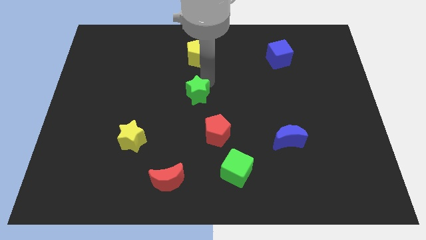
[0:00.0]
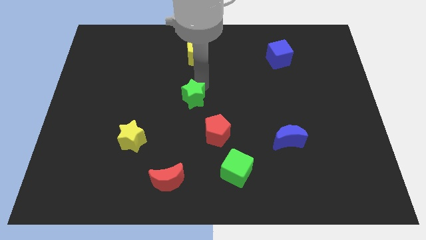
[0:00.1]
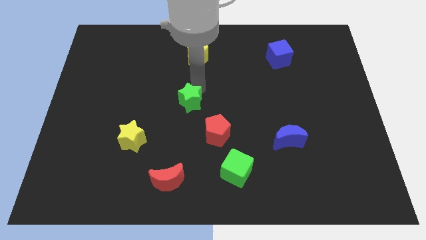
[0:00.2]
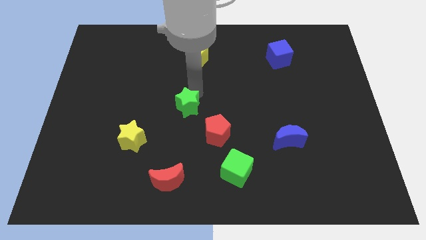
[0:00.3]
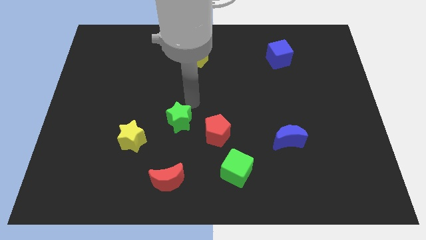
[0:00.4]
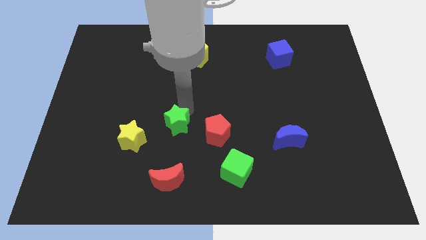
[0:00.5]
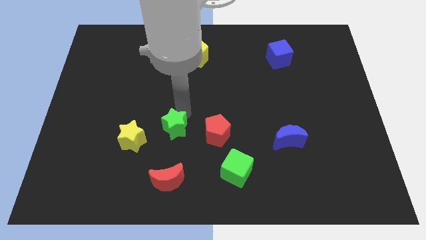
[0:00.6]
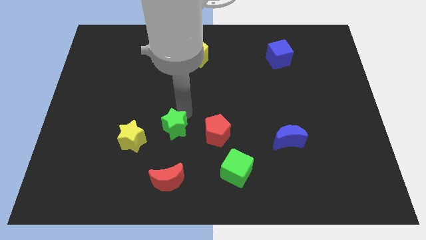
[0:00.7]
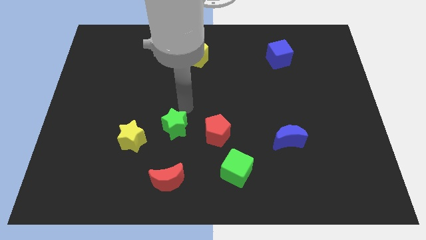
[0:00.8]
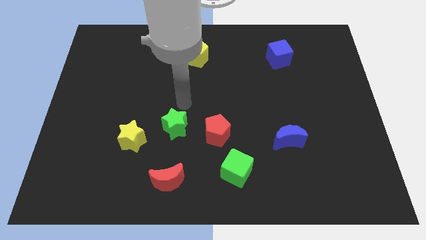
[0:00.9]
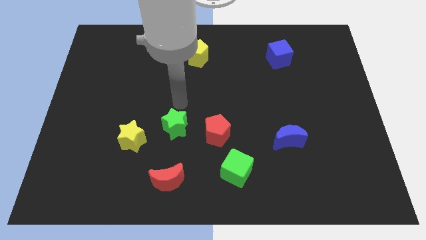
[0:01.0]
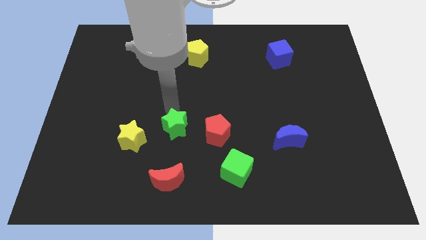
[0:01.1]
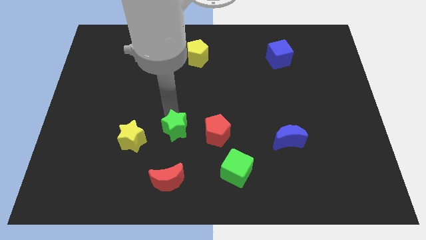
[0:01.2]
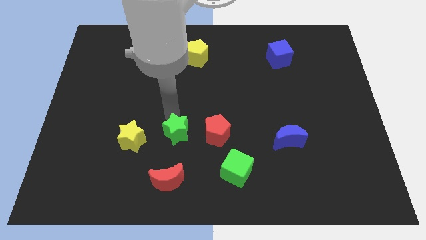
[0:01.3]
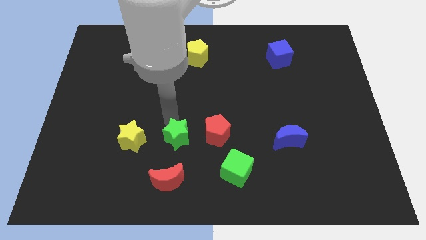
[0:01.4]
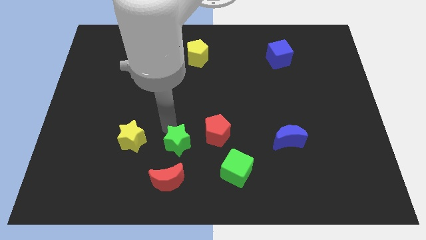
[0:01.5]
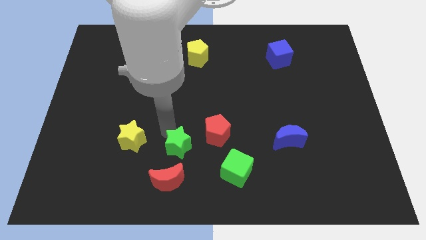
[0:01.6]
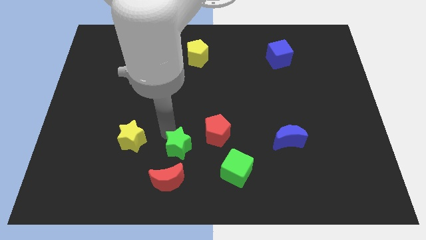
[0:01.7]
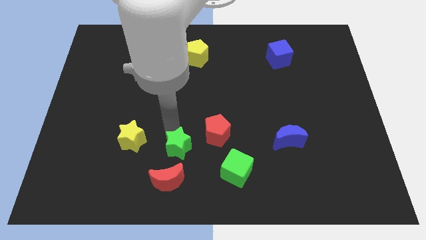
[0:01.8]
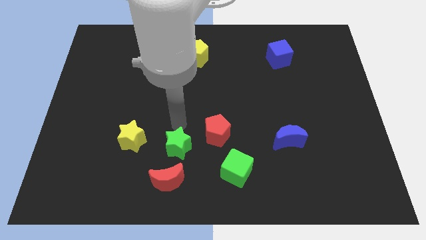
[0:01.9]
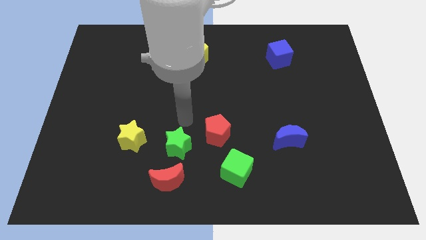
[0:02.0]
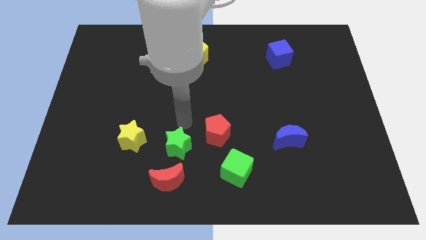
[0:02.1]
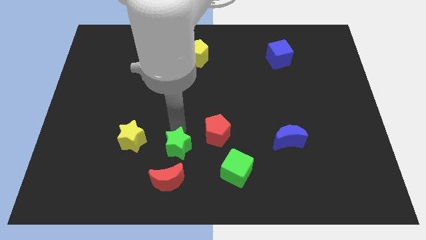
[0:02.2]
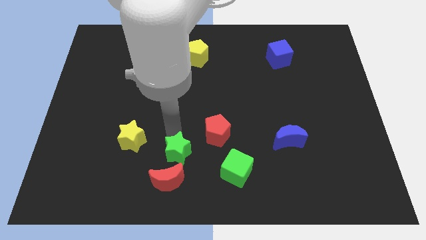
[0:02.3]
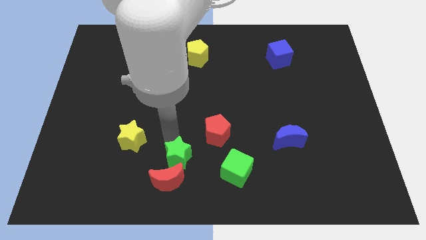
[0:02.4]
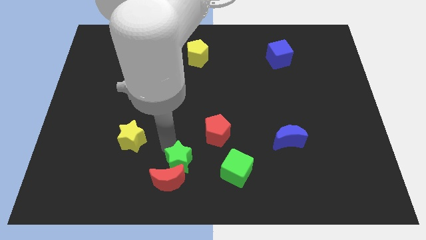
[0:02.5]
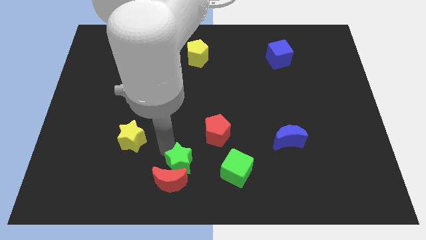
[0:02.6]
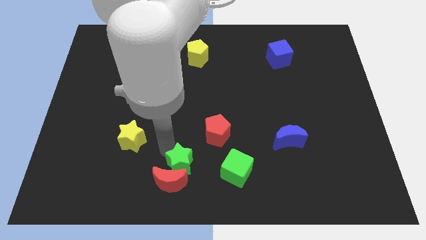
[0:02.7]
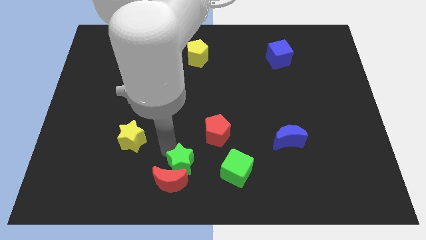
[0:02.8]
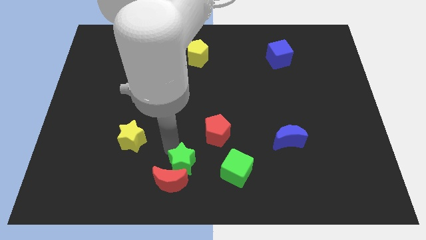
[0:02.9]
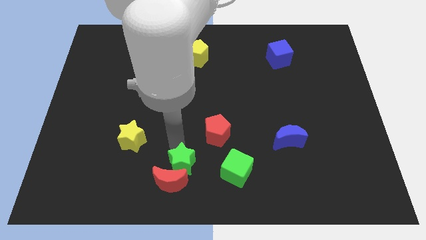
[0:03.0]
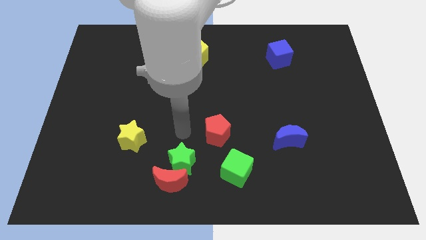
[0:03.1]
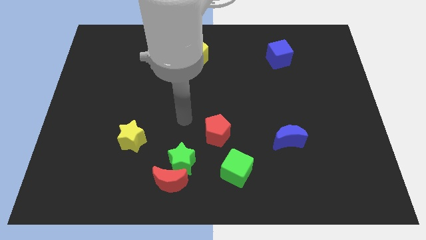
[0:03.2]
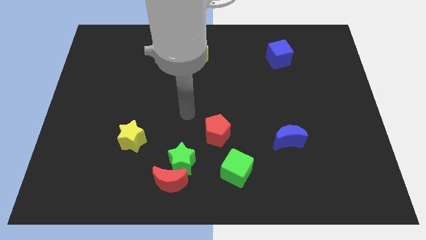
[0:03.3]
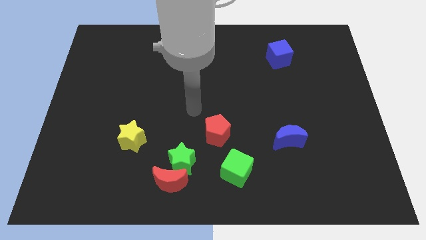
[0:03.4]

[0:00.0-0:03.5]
move the green star into the red moon

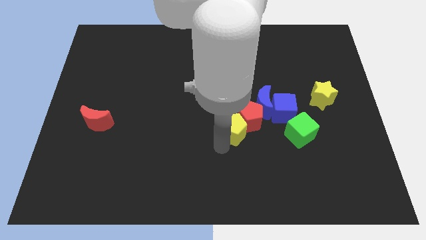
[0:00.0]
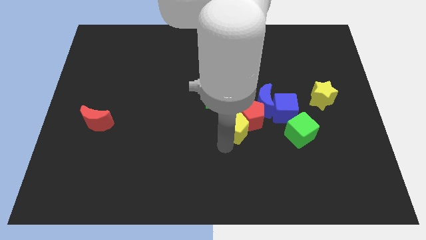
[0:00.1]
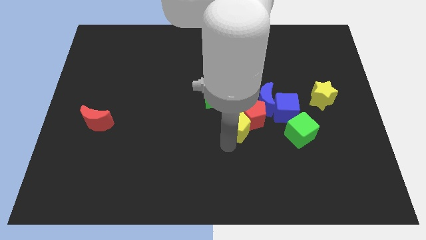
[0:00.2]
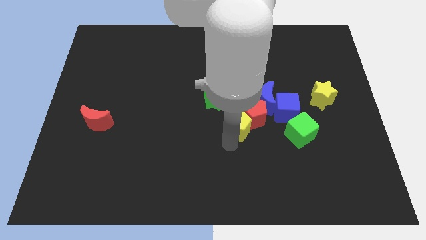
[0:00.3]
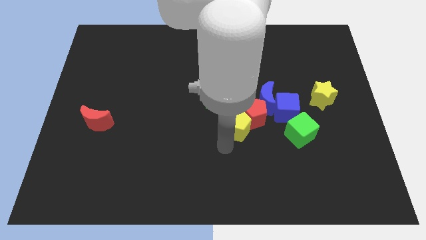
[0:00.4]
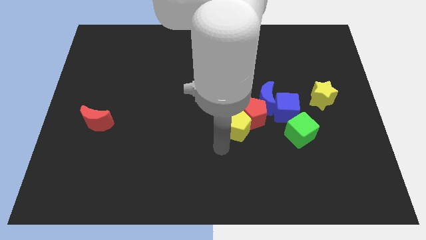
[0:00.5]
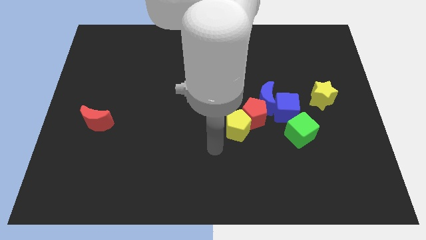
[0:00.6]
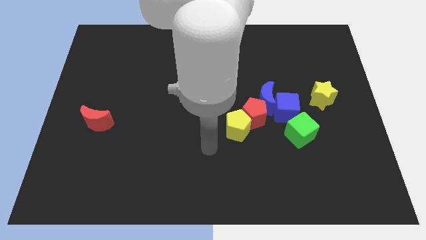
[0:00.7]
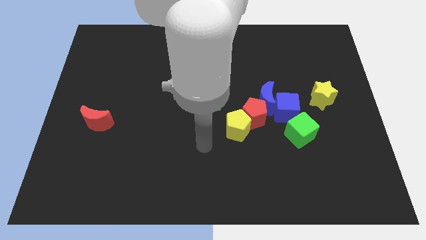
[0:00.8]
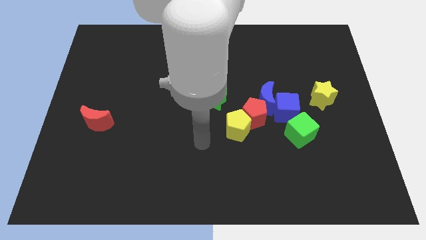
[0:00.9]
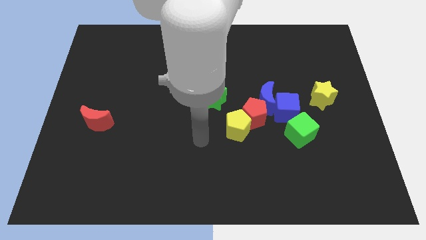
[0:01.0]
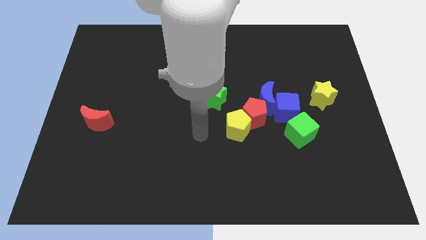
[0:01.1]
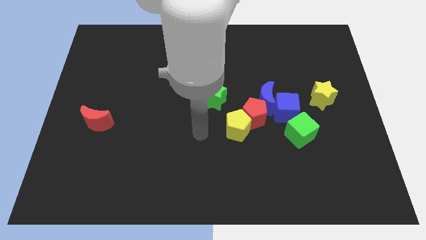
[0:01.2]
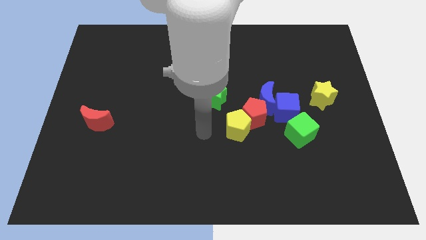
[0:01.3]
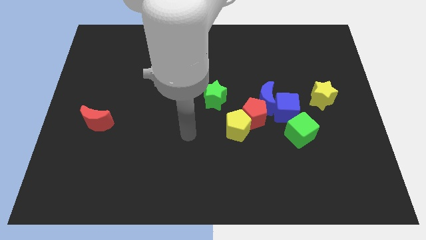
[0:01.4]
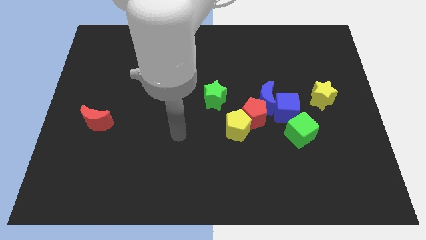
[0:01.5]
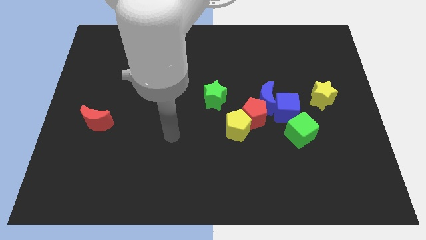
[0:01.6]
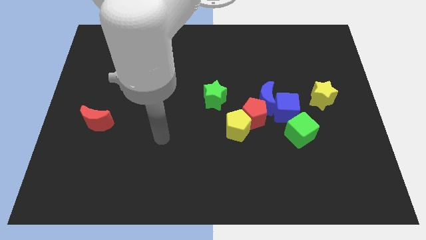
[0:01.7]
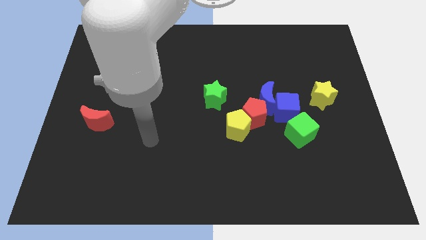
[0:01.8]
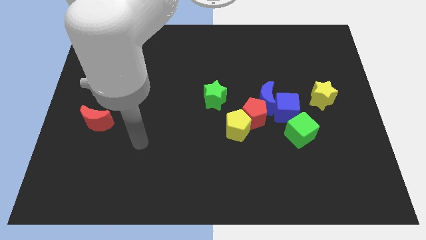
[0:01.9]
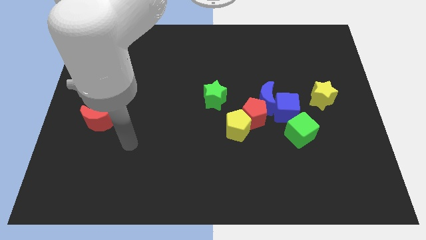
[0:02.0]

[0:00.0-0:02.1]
move your arm away from yellow pentagon

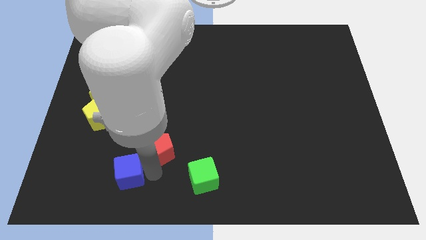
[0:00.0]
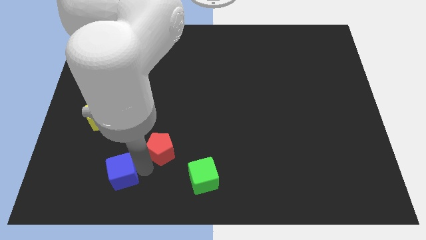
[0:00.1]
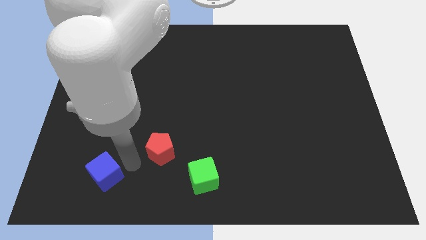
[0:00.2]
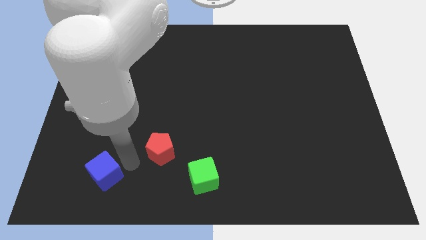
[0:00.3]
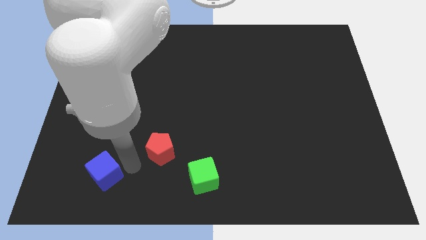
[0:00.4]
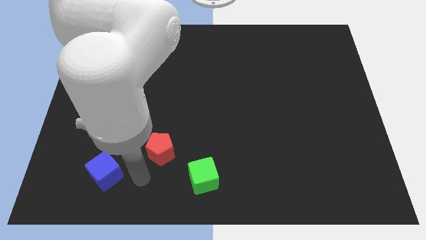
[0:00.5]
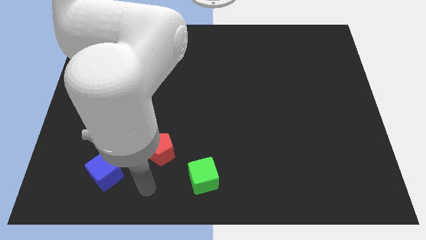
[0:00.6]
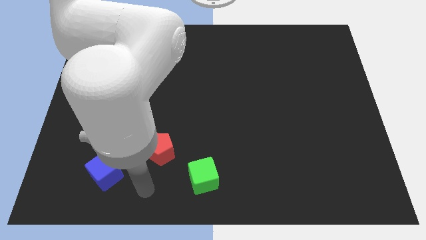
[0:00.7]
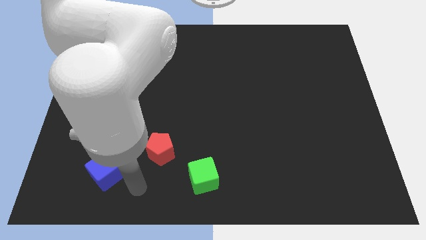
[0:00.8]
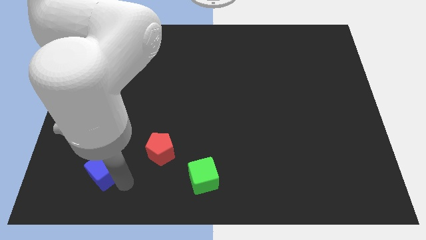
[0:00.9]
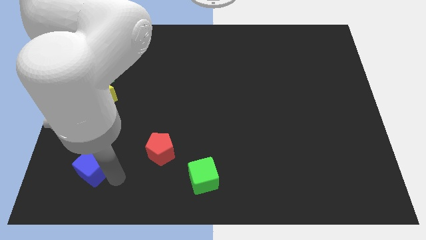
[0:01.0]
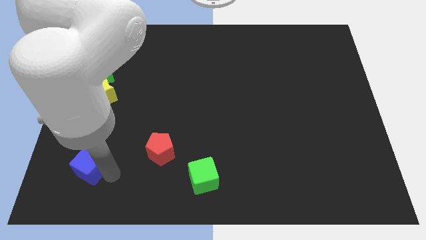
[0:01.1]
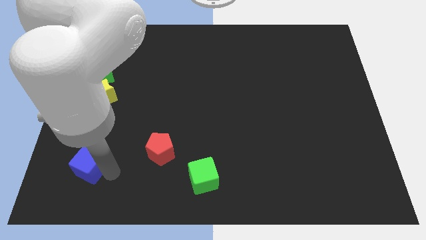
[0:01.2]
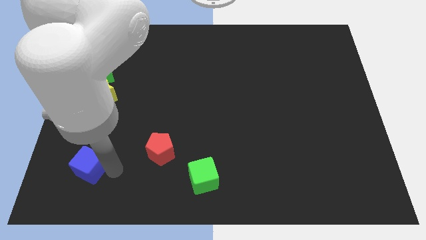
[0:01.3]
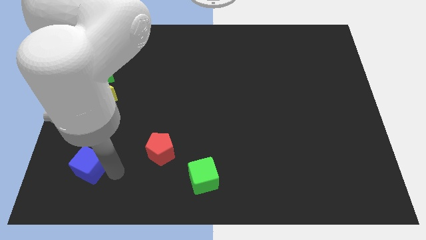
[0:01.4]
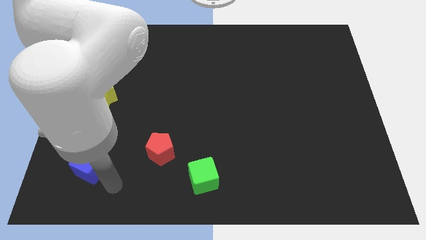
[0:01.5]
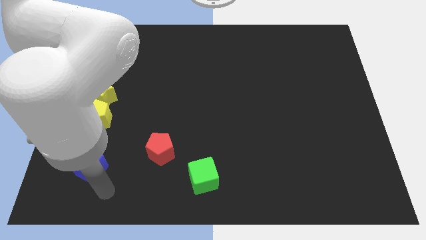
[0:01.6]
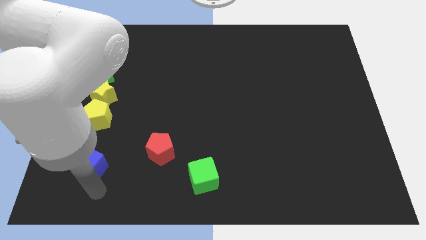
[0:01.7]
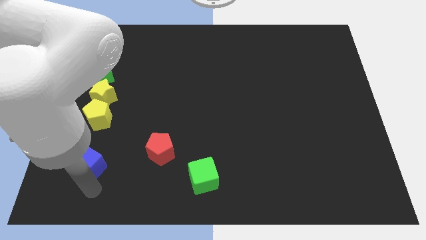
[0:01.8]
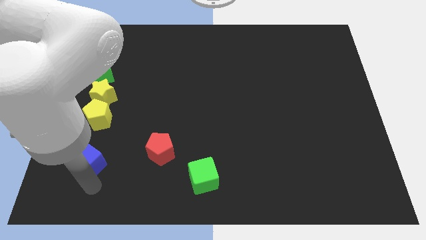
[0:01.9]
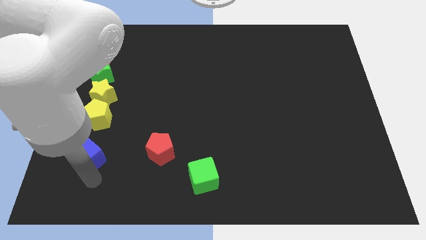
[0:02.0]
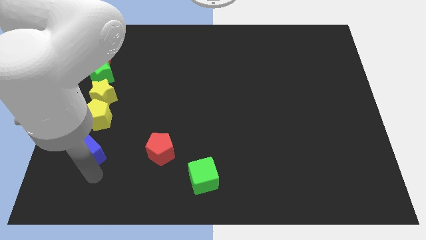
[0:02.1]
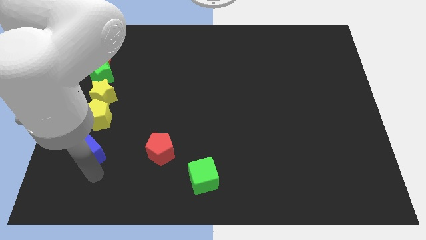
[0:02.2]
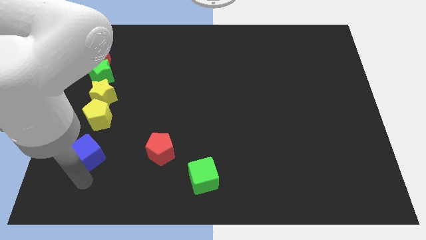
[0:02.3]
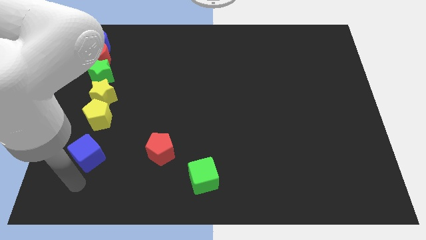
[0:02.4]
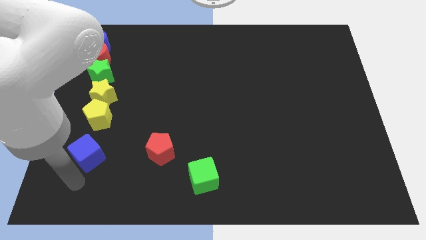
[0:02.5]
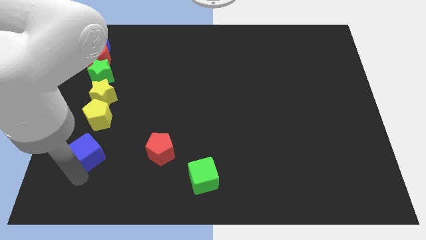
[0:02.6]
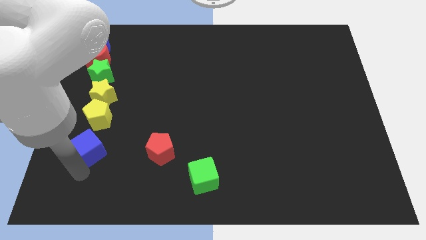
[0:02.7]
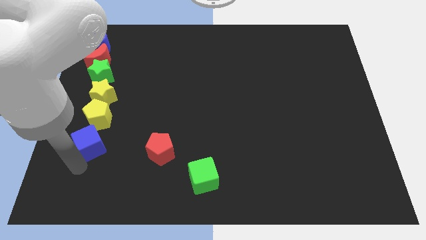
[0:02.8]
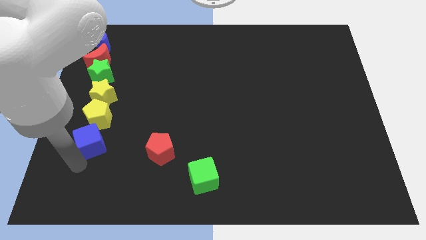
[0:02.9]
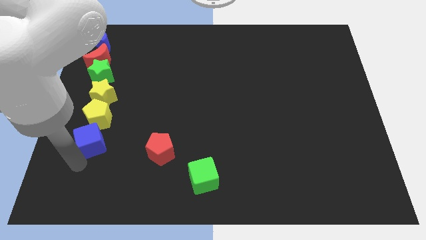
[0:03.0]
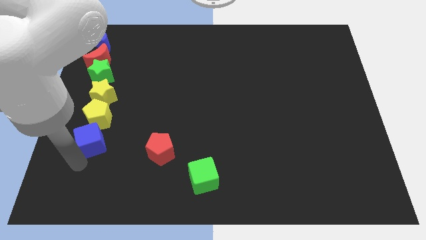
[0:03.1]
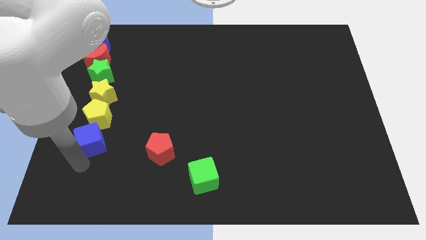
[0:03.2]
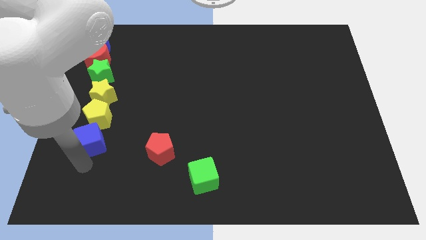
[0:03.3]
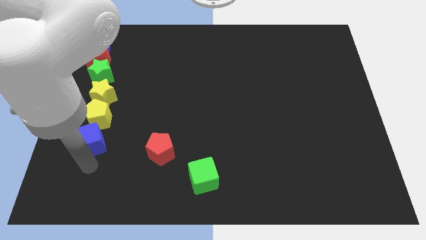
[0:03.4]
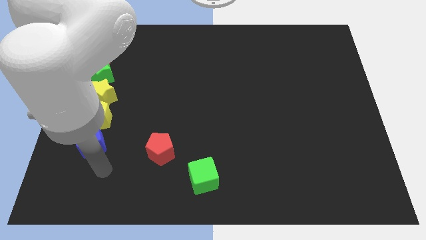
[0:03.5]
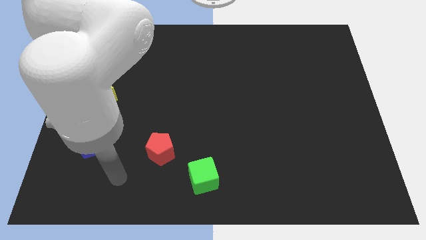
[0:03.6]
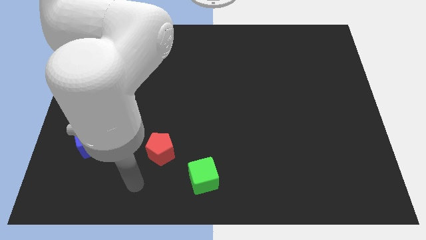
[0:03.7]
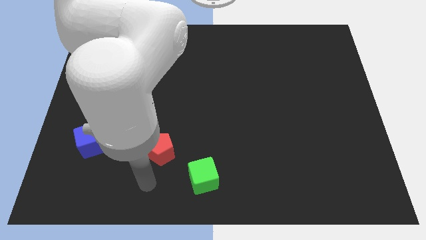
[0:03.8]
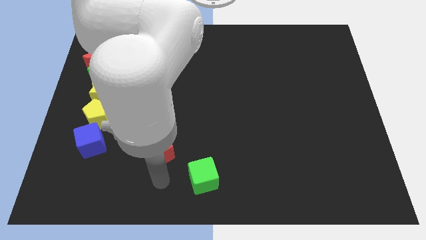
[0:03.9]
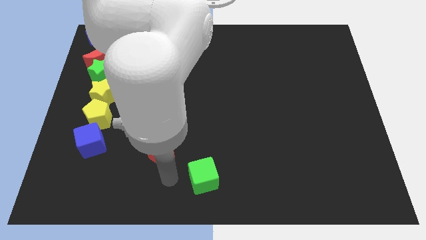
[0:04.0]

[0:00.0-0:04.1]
slide the blue cube below the yellow pentagon
